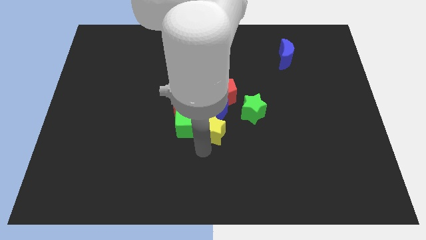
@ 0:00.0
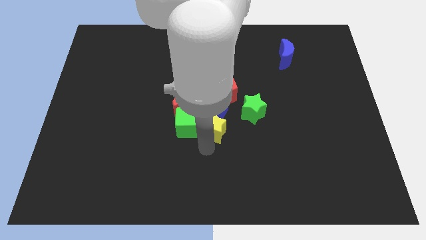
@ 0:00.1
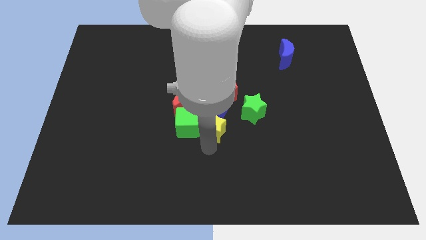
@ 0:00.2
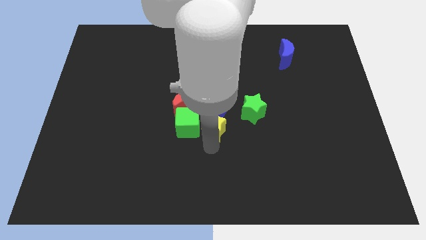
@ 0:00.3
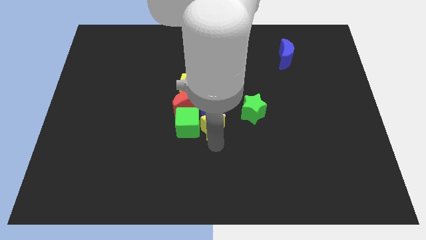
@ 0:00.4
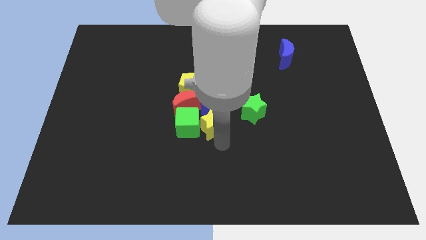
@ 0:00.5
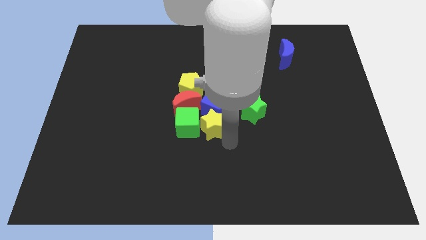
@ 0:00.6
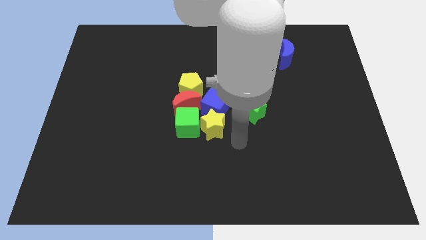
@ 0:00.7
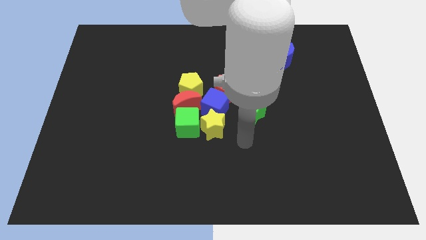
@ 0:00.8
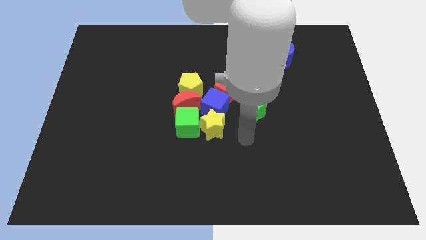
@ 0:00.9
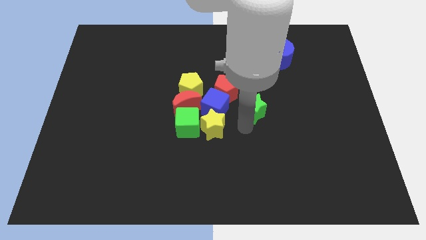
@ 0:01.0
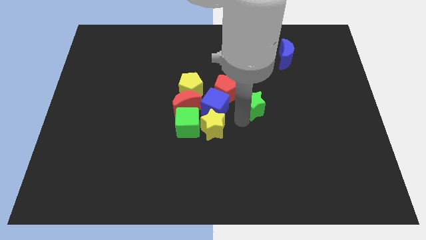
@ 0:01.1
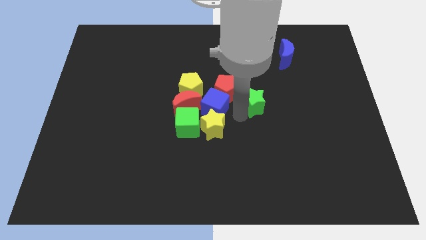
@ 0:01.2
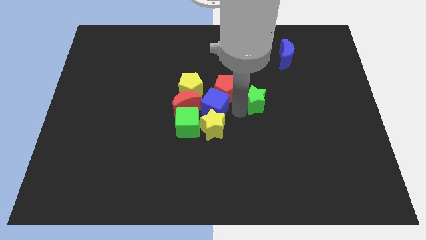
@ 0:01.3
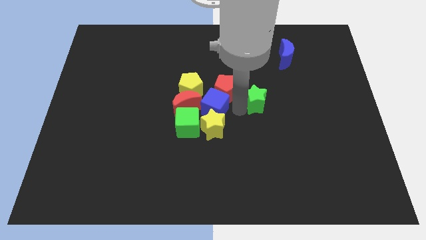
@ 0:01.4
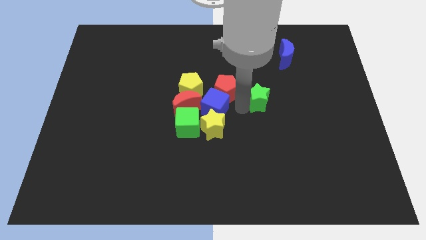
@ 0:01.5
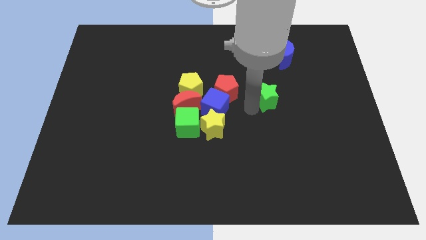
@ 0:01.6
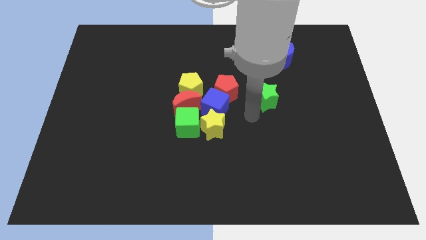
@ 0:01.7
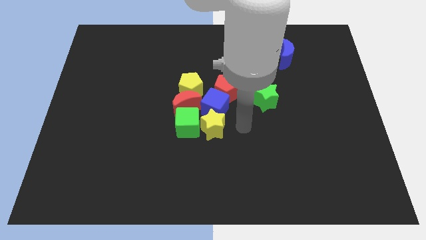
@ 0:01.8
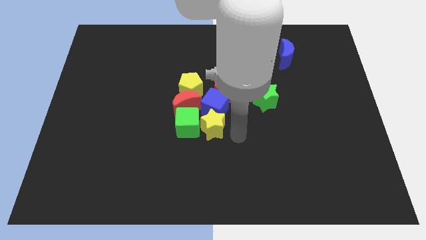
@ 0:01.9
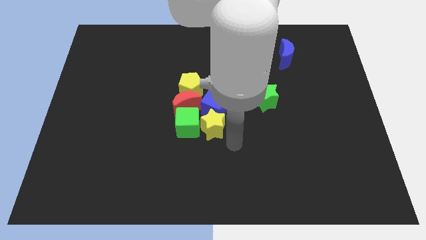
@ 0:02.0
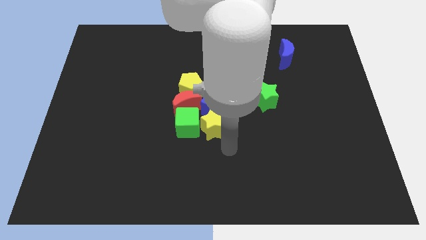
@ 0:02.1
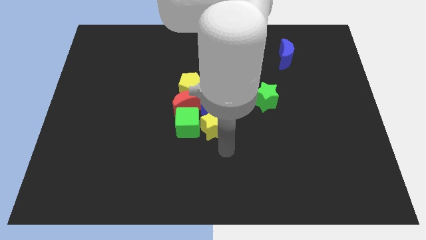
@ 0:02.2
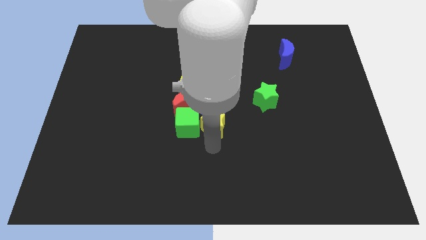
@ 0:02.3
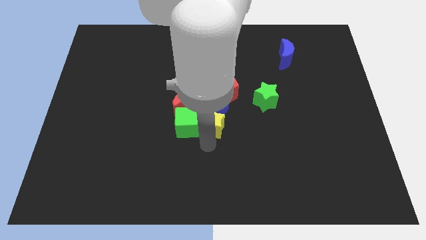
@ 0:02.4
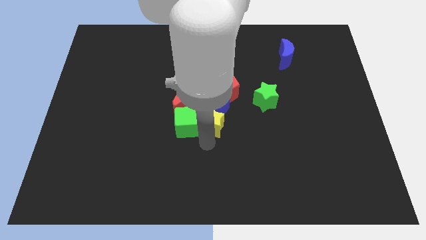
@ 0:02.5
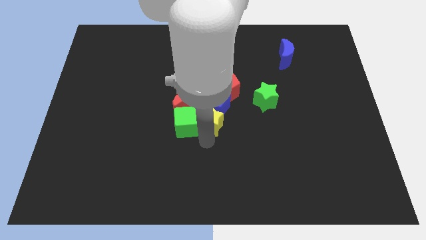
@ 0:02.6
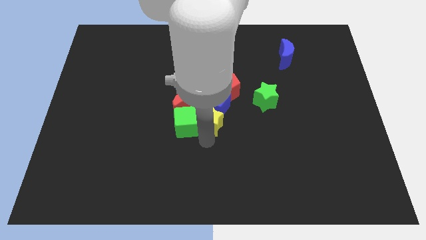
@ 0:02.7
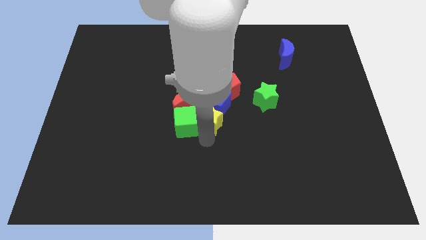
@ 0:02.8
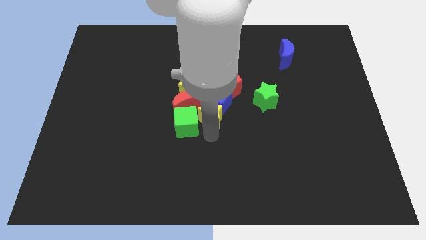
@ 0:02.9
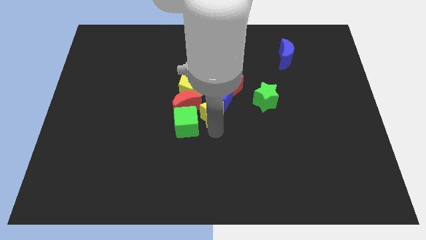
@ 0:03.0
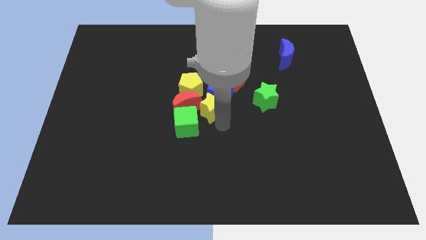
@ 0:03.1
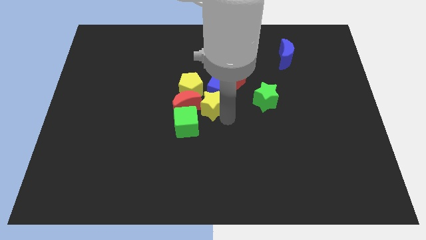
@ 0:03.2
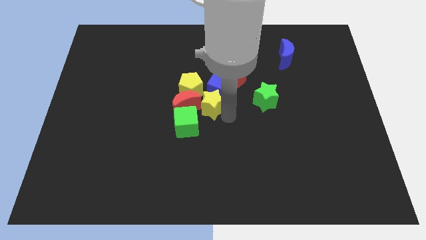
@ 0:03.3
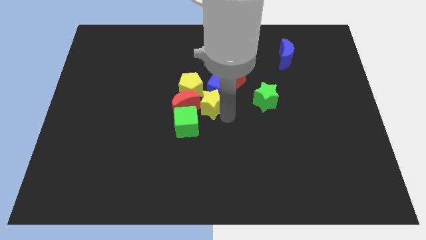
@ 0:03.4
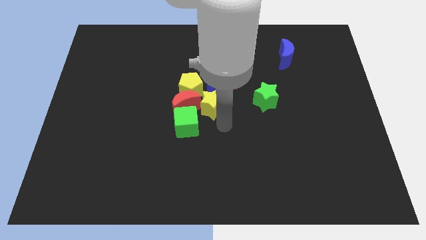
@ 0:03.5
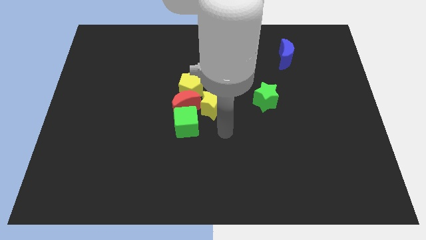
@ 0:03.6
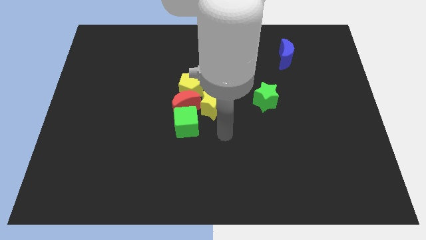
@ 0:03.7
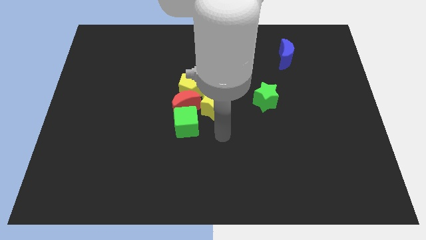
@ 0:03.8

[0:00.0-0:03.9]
push the yellow star into the blue cube

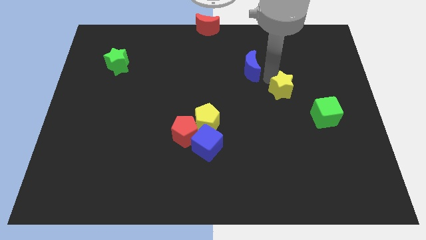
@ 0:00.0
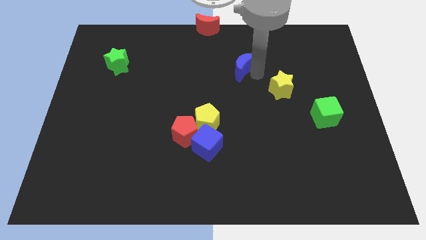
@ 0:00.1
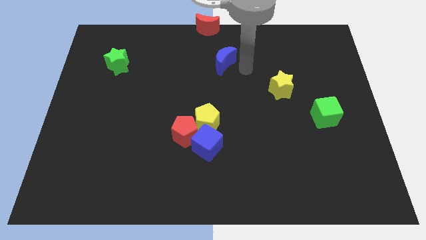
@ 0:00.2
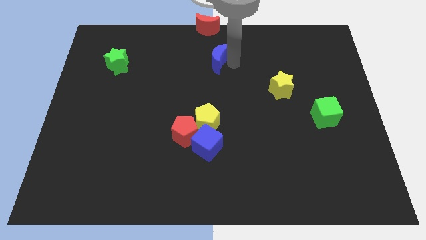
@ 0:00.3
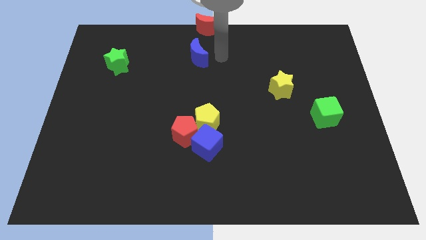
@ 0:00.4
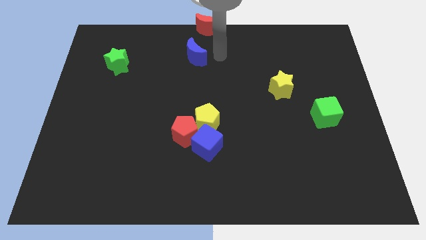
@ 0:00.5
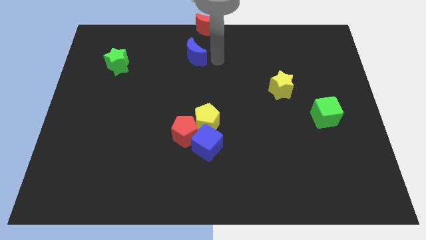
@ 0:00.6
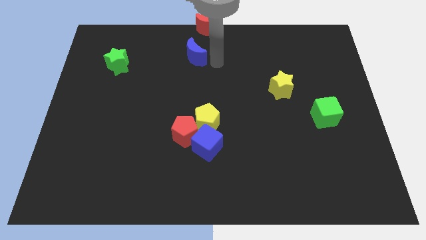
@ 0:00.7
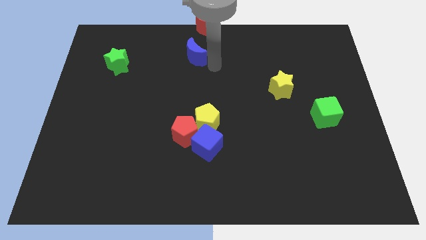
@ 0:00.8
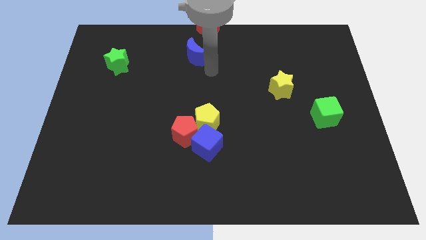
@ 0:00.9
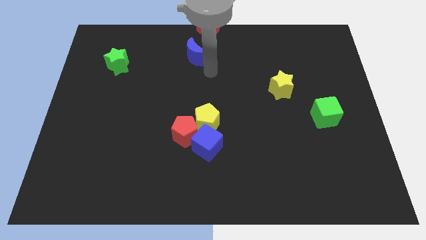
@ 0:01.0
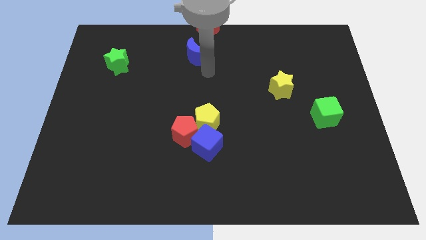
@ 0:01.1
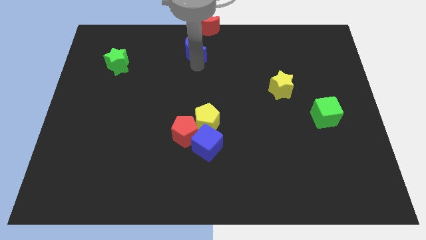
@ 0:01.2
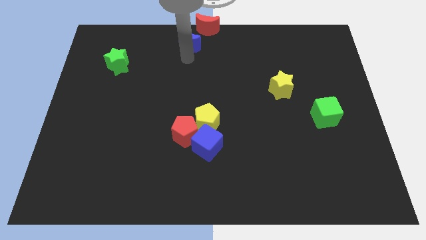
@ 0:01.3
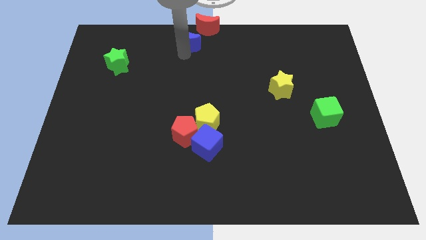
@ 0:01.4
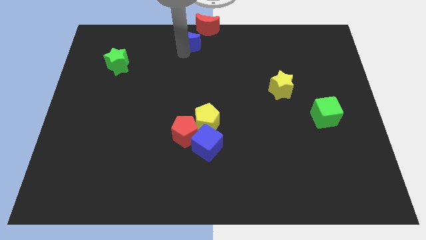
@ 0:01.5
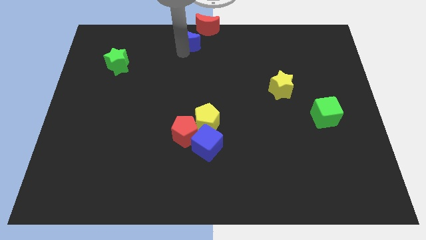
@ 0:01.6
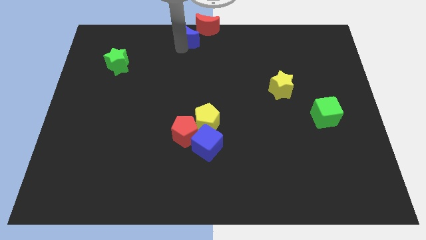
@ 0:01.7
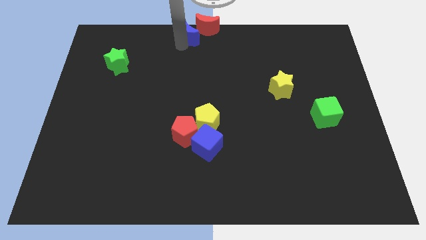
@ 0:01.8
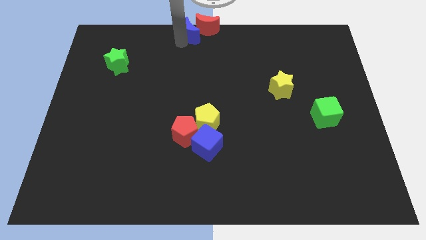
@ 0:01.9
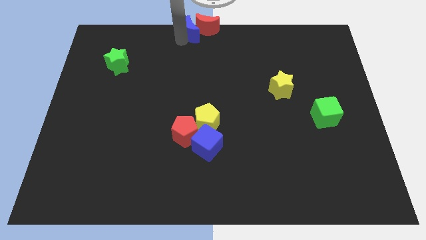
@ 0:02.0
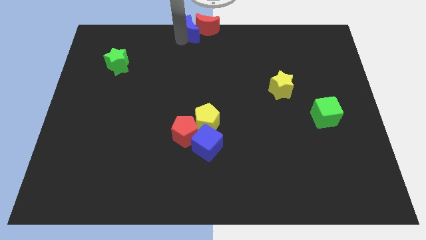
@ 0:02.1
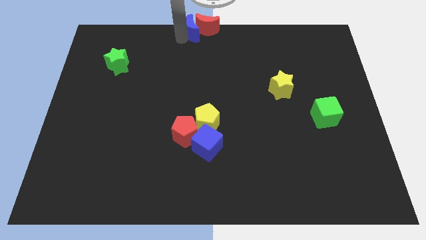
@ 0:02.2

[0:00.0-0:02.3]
move the blue crescent left to red crescent

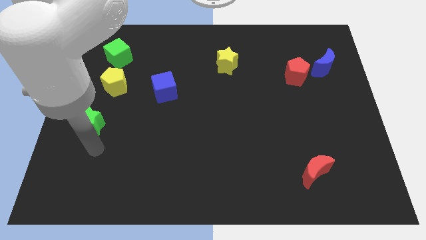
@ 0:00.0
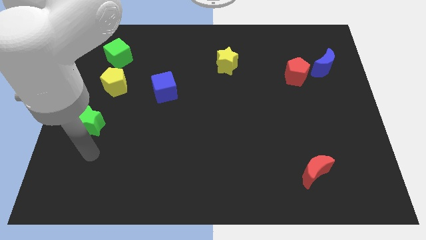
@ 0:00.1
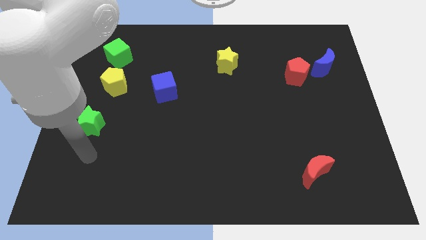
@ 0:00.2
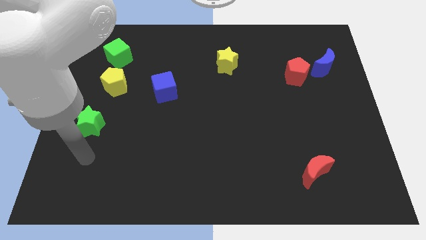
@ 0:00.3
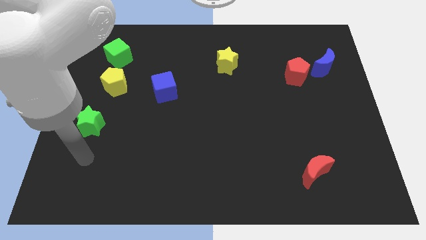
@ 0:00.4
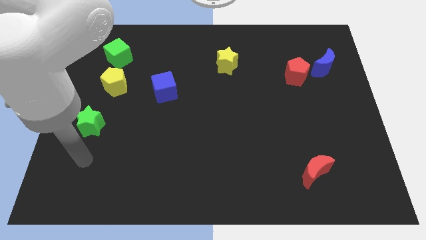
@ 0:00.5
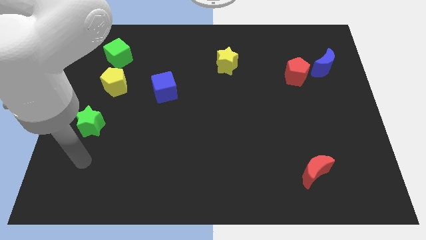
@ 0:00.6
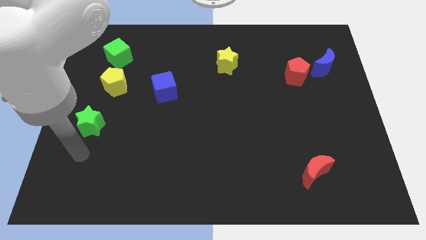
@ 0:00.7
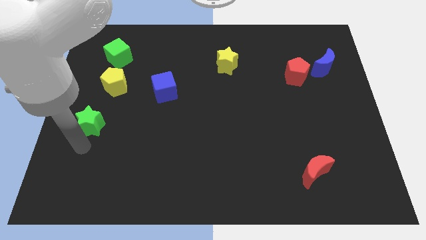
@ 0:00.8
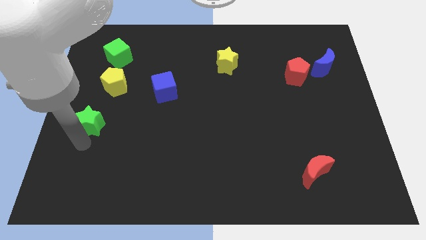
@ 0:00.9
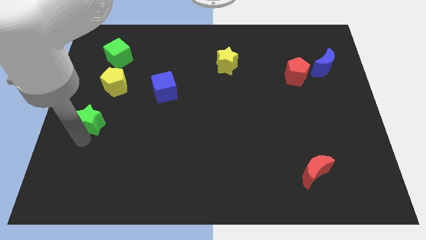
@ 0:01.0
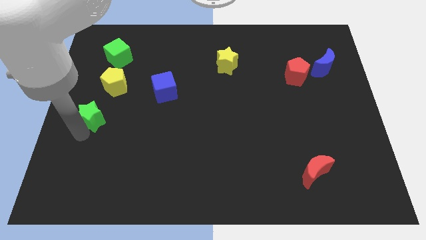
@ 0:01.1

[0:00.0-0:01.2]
push the green star towards the yellow pentagon

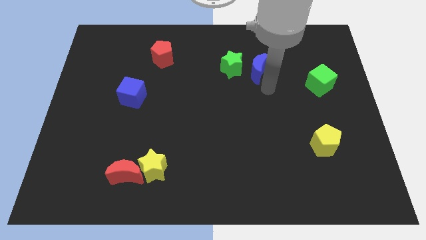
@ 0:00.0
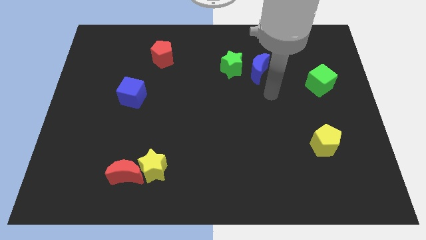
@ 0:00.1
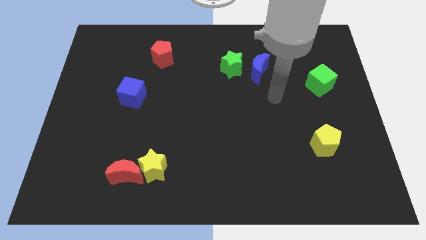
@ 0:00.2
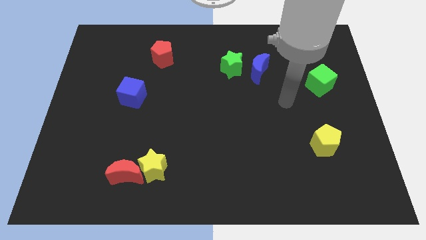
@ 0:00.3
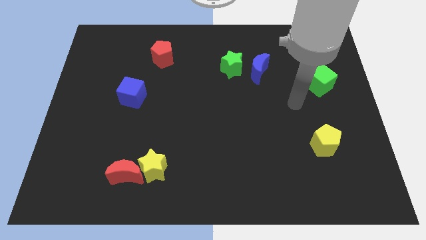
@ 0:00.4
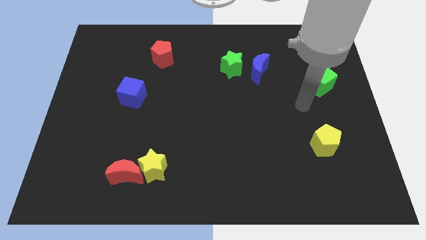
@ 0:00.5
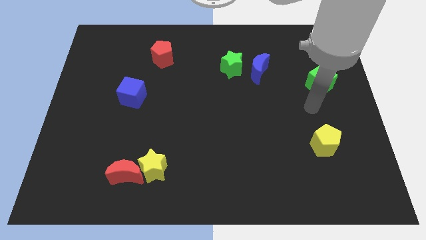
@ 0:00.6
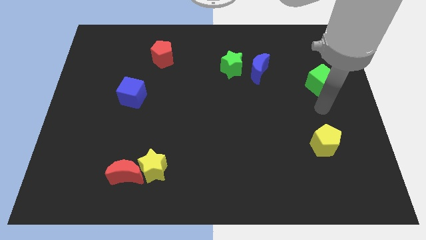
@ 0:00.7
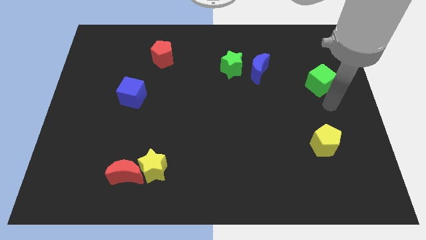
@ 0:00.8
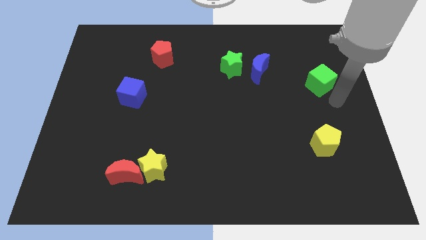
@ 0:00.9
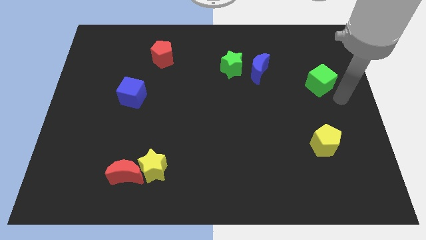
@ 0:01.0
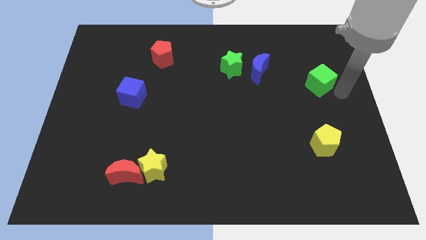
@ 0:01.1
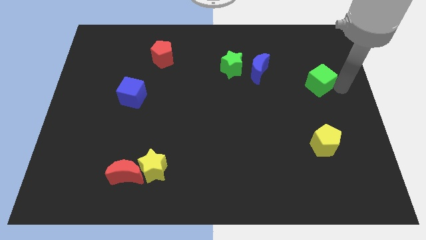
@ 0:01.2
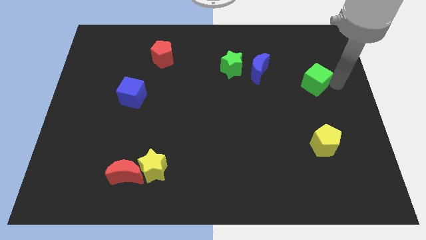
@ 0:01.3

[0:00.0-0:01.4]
move your arm away from the blue moon
